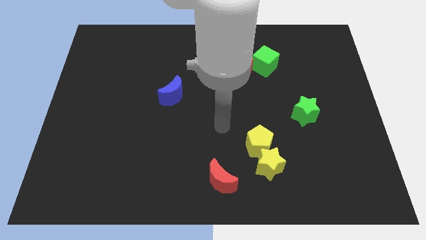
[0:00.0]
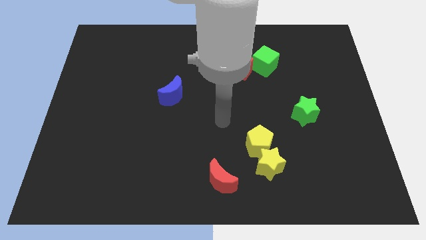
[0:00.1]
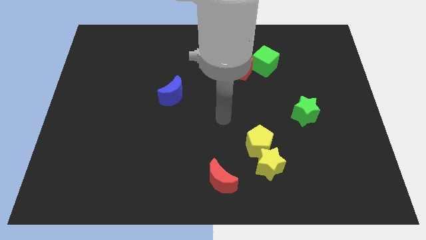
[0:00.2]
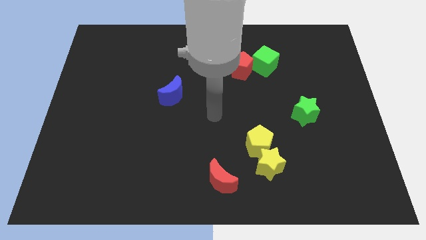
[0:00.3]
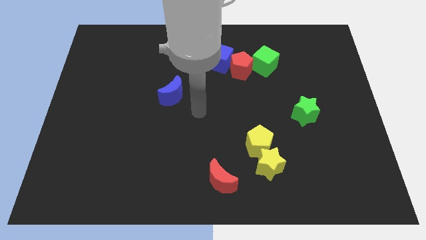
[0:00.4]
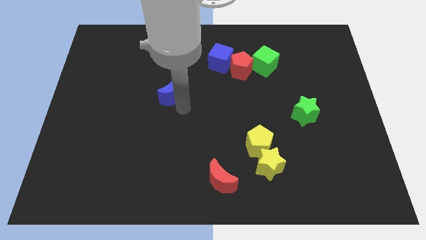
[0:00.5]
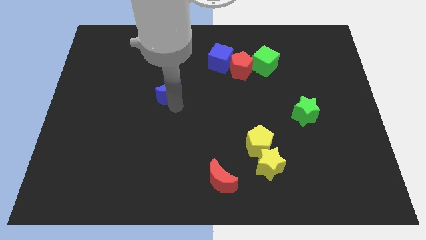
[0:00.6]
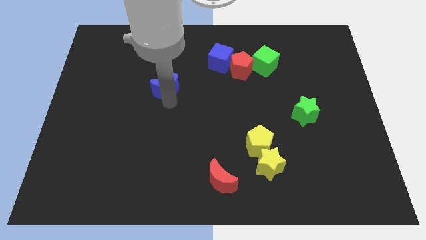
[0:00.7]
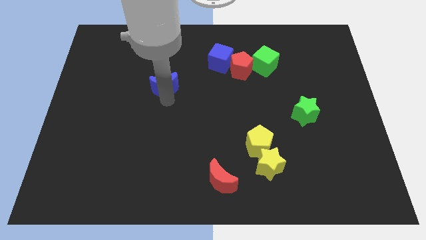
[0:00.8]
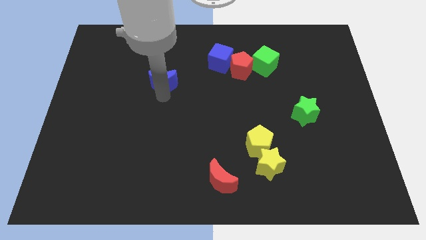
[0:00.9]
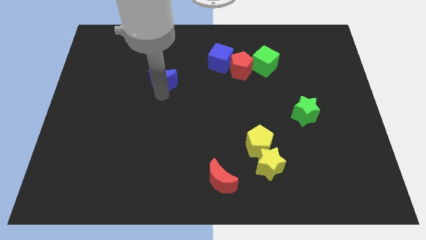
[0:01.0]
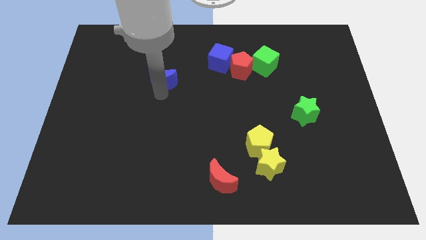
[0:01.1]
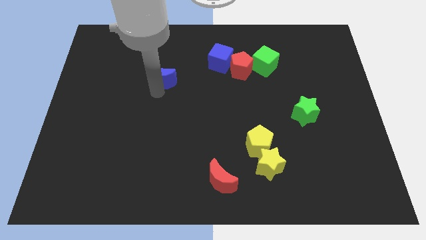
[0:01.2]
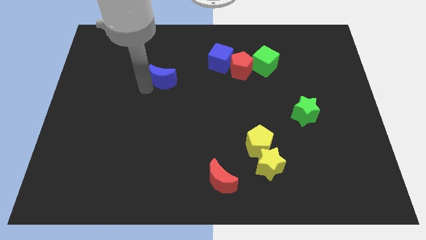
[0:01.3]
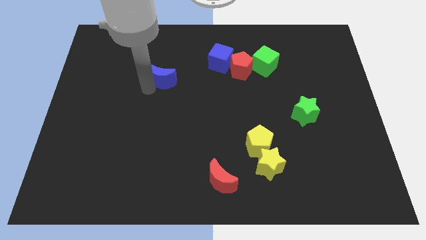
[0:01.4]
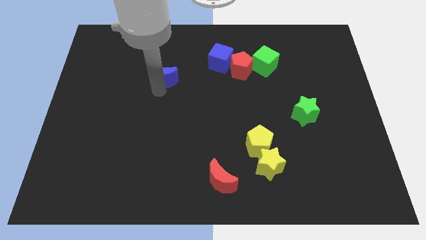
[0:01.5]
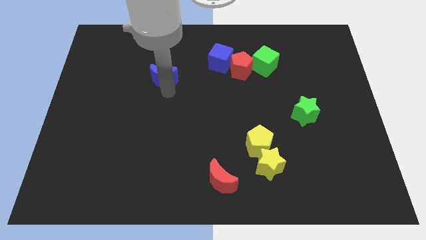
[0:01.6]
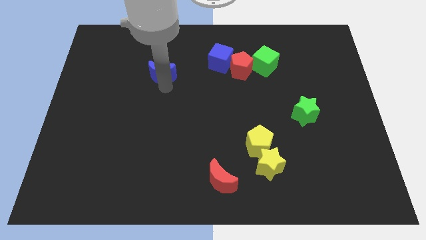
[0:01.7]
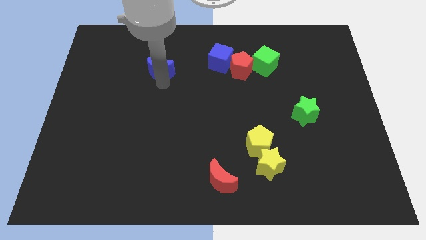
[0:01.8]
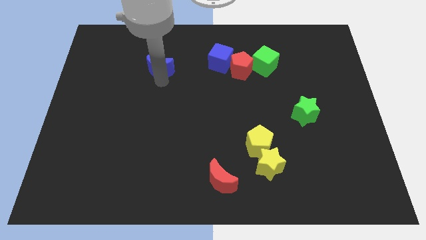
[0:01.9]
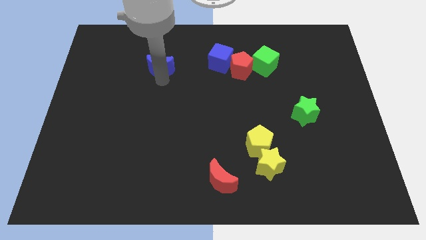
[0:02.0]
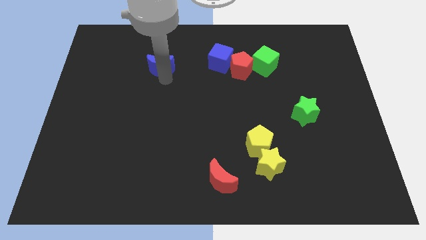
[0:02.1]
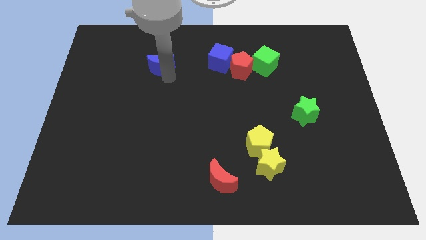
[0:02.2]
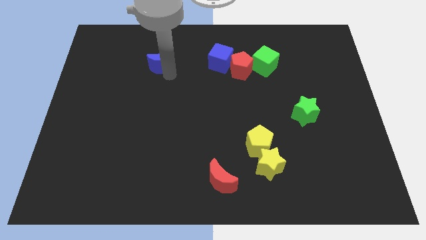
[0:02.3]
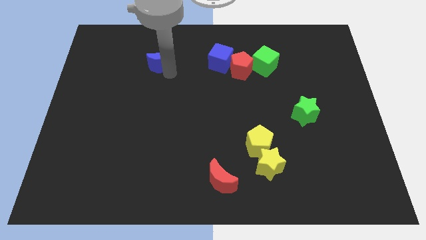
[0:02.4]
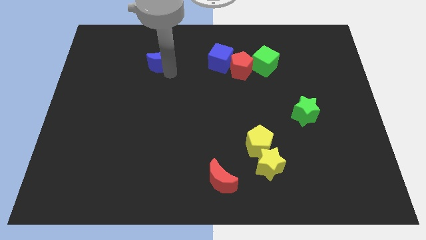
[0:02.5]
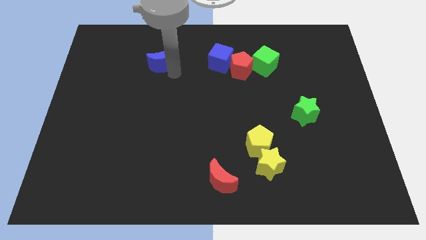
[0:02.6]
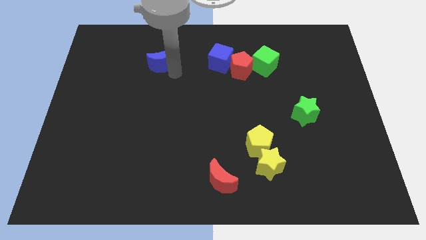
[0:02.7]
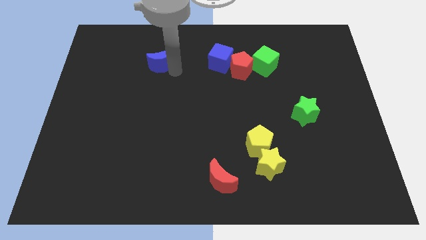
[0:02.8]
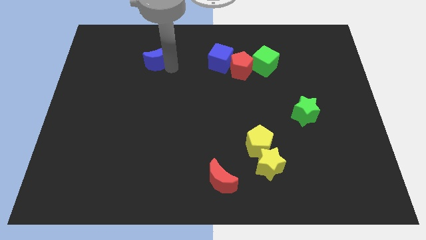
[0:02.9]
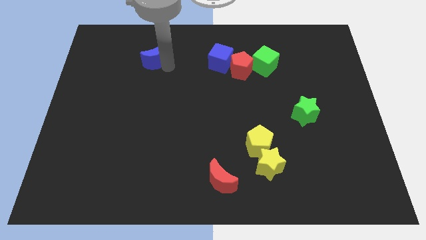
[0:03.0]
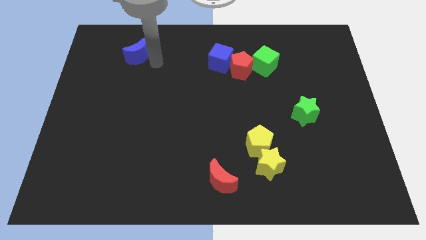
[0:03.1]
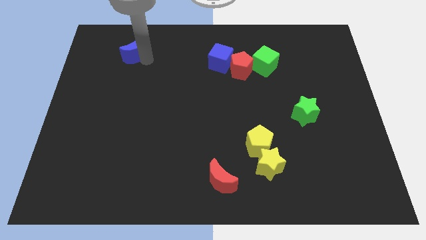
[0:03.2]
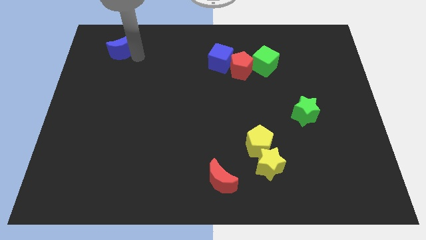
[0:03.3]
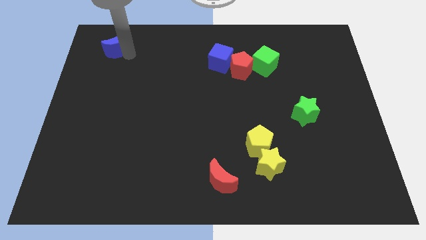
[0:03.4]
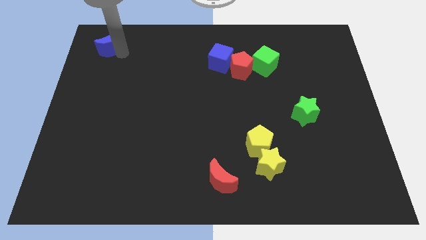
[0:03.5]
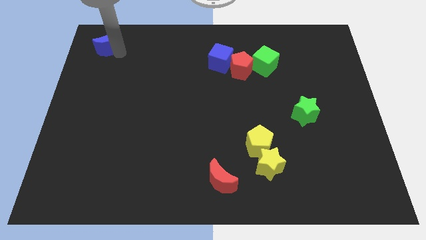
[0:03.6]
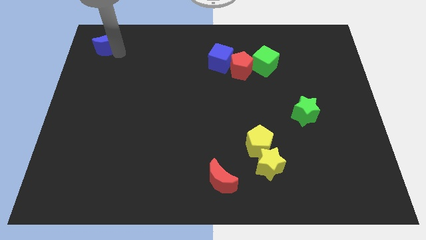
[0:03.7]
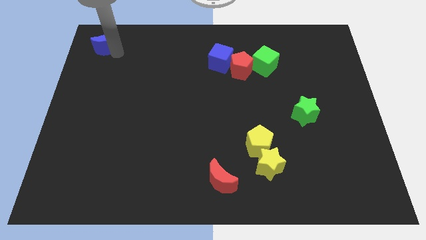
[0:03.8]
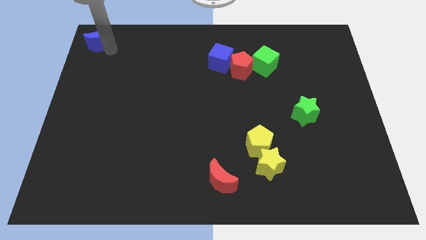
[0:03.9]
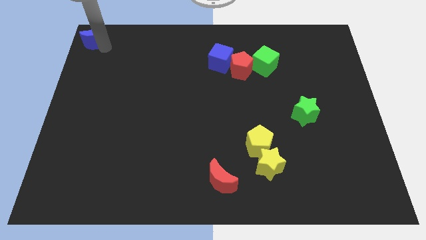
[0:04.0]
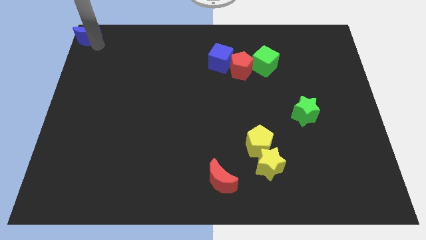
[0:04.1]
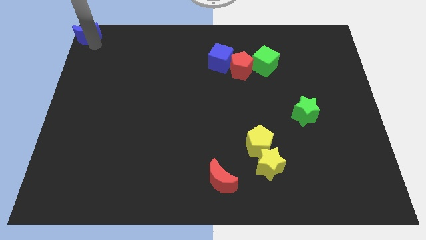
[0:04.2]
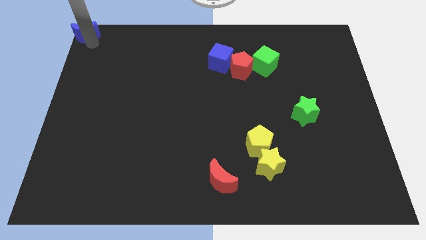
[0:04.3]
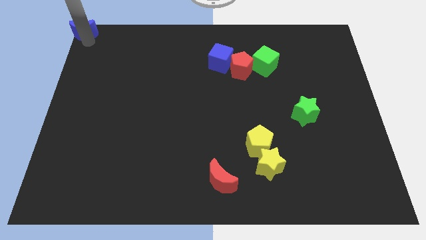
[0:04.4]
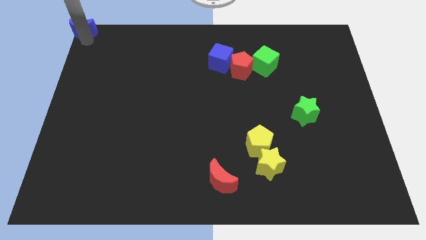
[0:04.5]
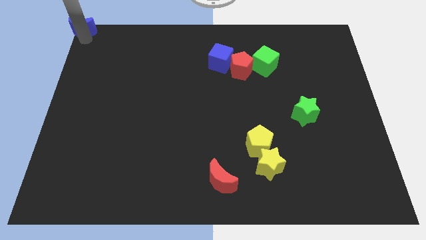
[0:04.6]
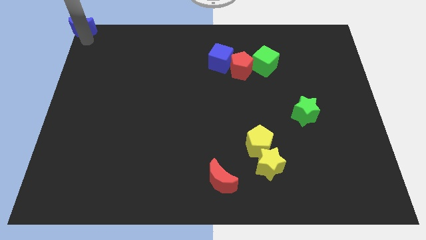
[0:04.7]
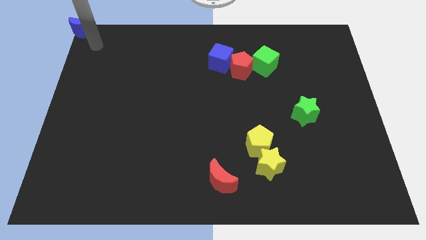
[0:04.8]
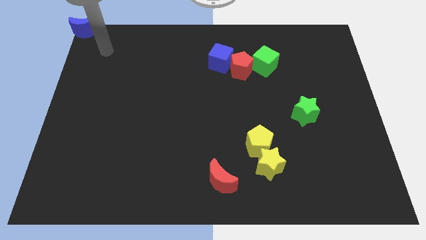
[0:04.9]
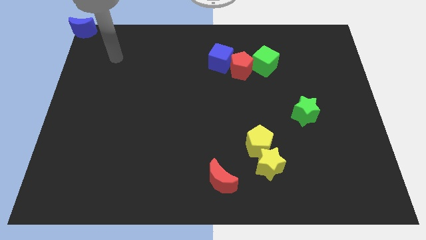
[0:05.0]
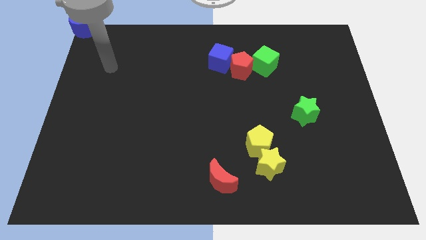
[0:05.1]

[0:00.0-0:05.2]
move the blue moon to the top right side of the board

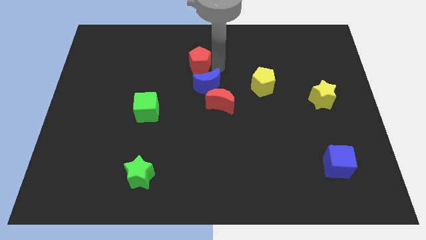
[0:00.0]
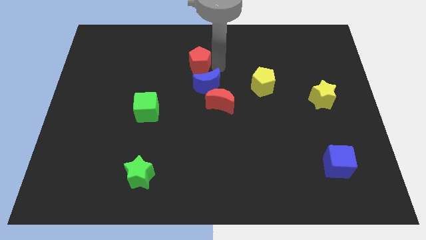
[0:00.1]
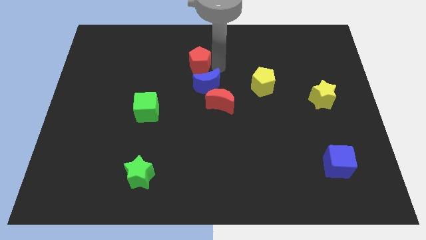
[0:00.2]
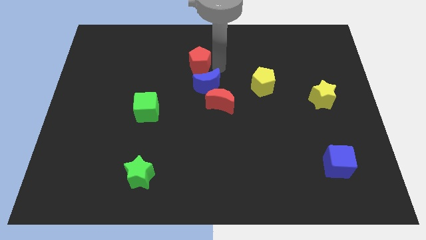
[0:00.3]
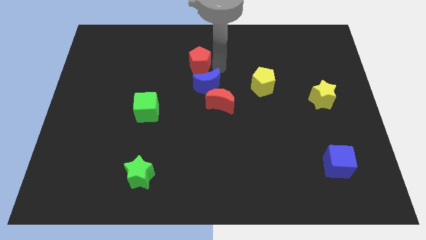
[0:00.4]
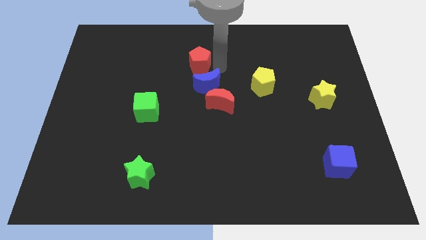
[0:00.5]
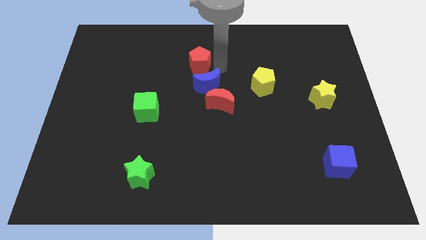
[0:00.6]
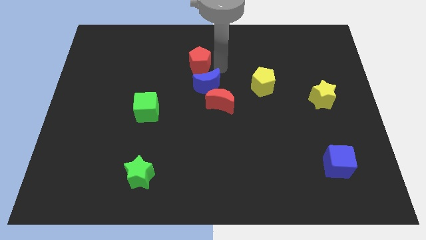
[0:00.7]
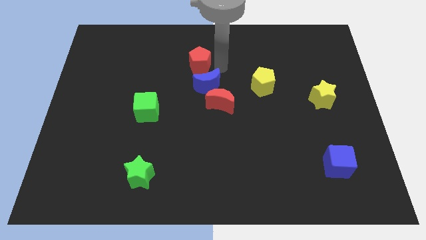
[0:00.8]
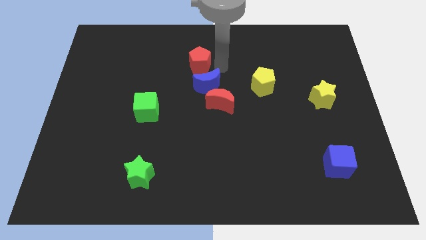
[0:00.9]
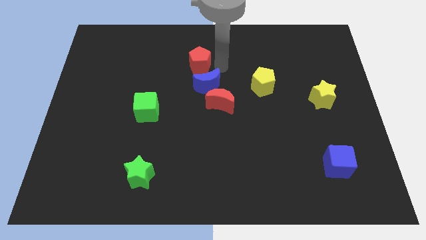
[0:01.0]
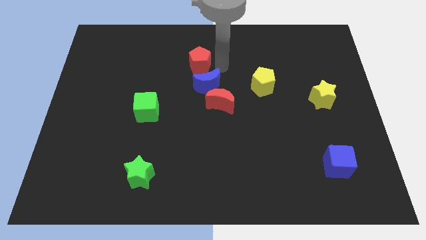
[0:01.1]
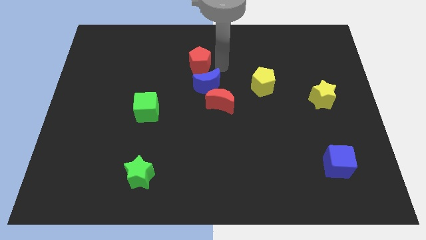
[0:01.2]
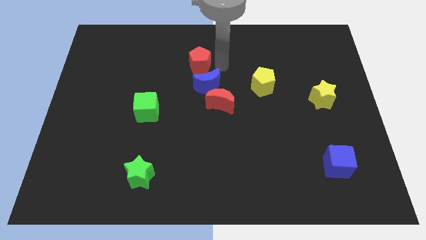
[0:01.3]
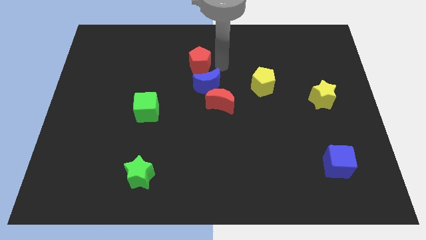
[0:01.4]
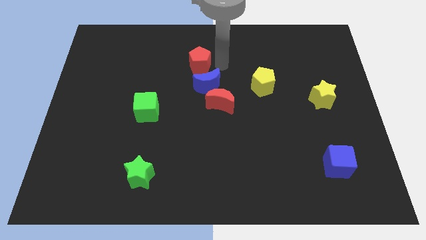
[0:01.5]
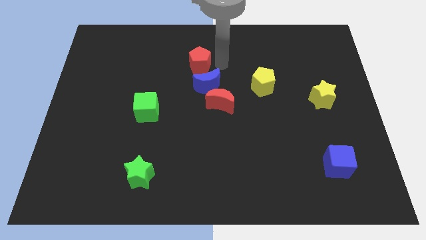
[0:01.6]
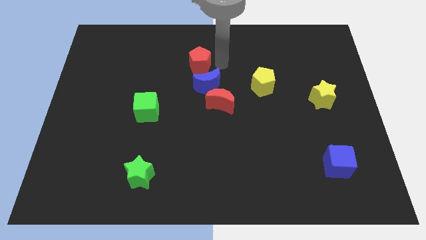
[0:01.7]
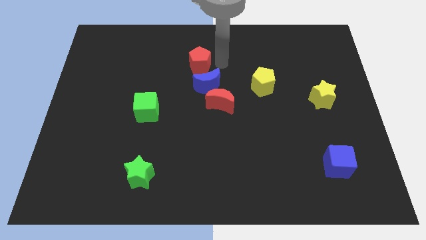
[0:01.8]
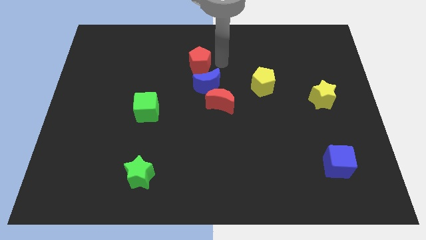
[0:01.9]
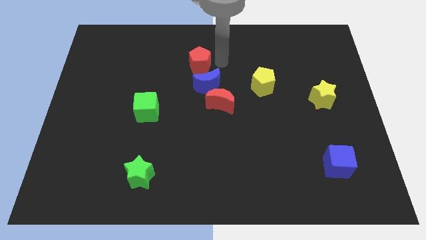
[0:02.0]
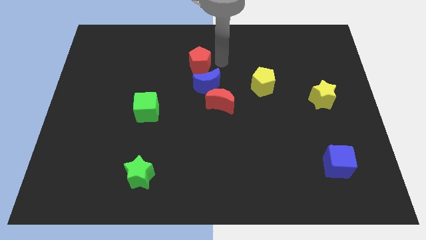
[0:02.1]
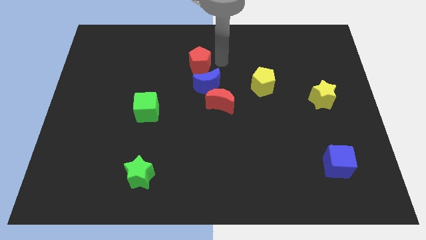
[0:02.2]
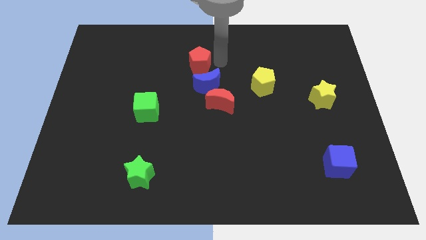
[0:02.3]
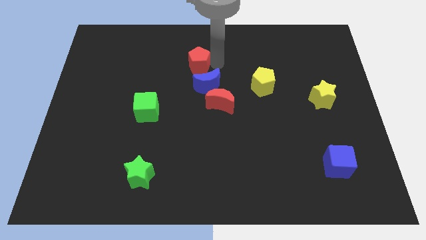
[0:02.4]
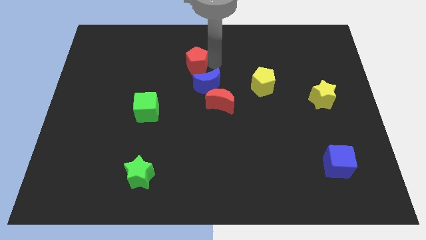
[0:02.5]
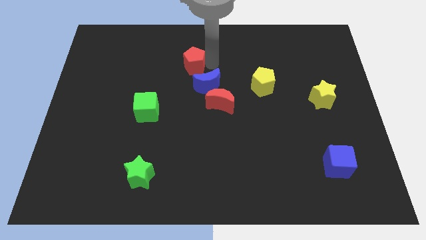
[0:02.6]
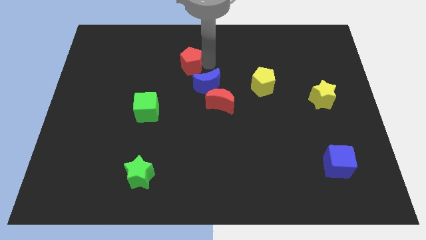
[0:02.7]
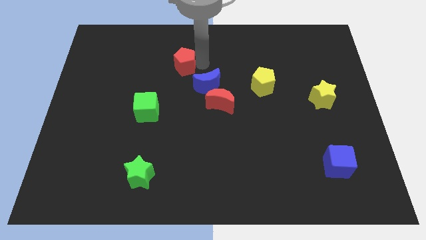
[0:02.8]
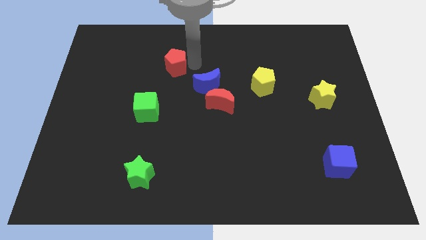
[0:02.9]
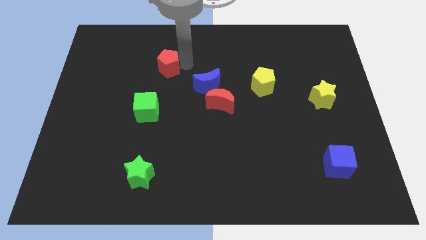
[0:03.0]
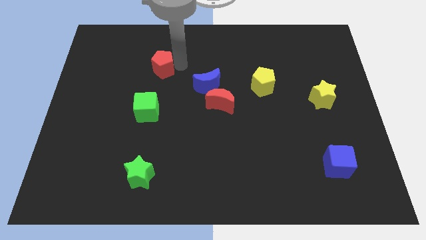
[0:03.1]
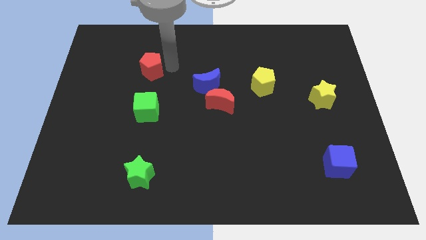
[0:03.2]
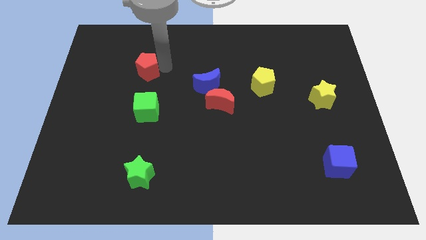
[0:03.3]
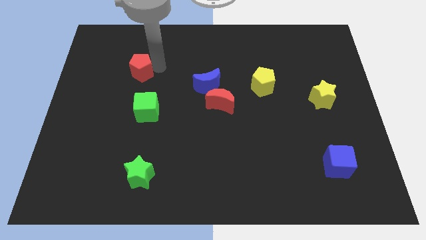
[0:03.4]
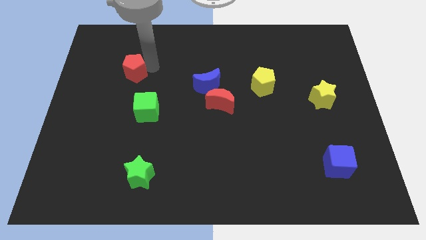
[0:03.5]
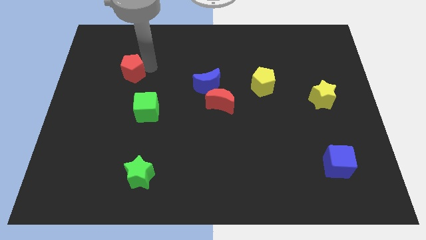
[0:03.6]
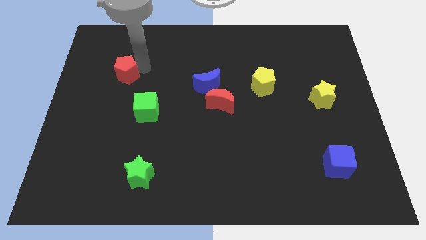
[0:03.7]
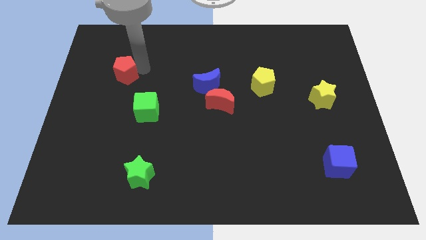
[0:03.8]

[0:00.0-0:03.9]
separate red pentagon from blue moon
